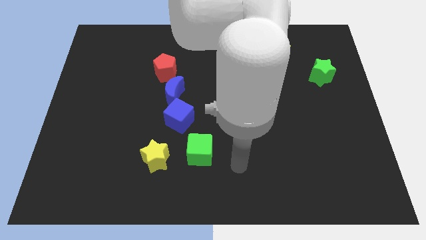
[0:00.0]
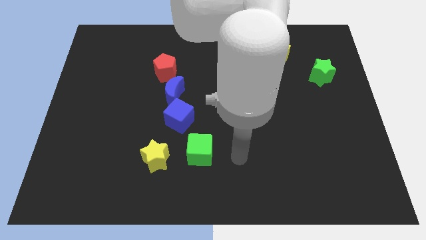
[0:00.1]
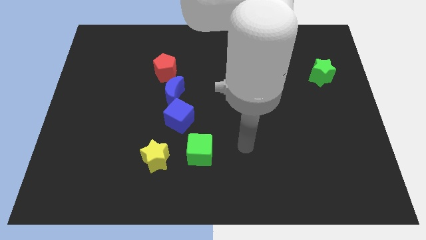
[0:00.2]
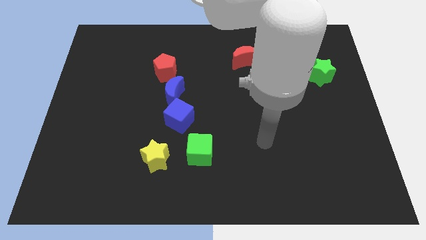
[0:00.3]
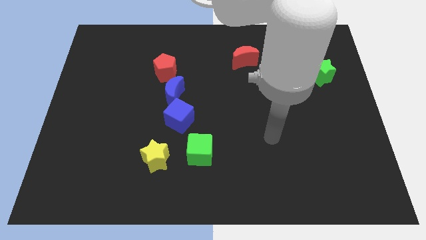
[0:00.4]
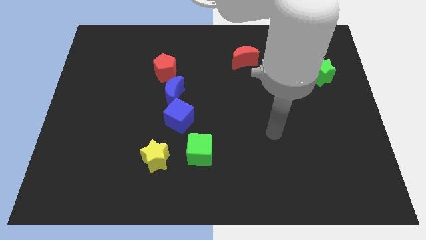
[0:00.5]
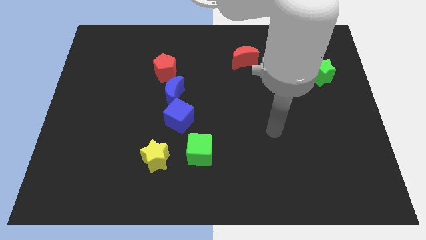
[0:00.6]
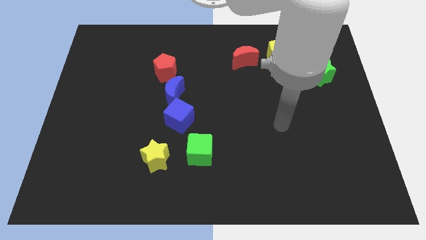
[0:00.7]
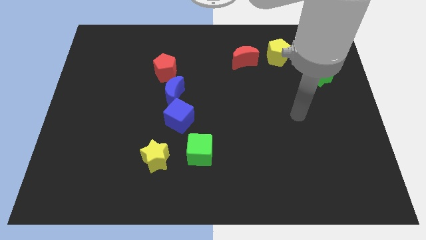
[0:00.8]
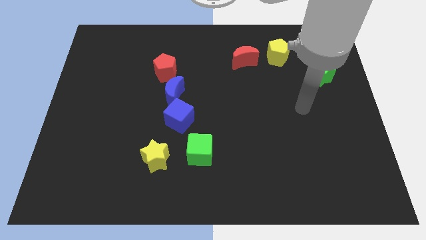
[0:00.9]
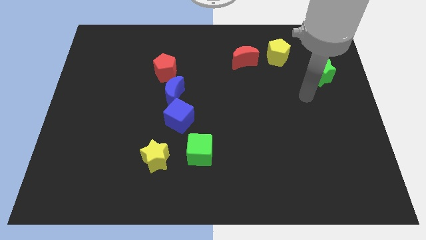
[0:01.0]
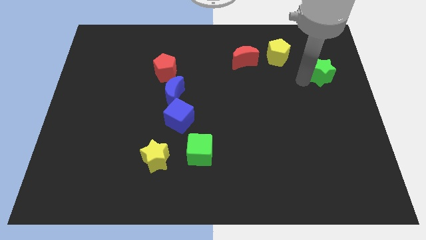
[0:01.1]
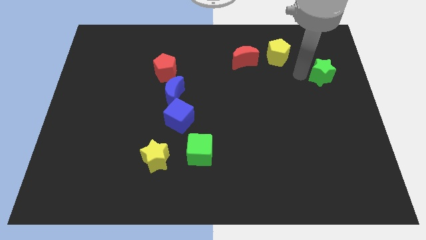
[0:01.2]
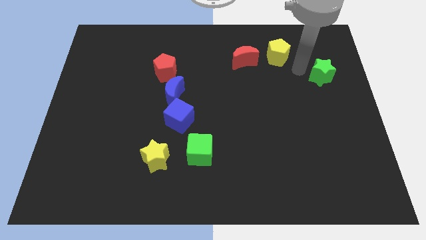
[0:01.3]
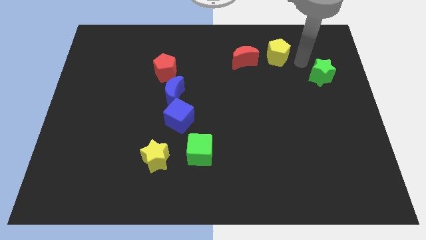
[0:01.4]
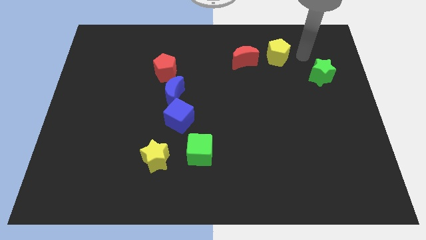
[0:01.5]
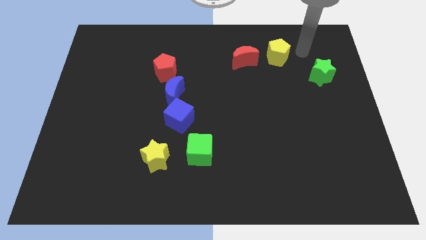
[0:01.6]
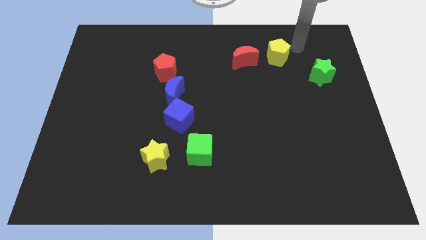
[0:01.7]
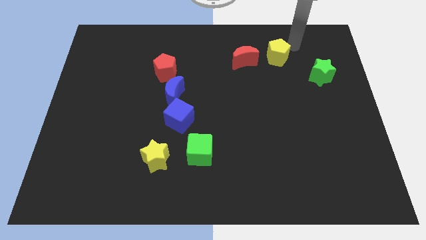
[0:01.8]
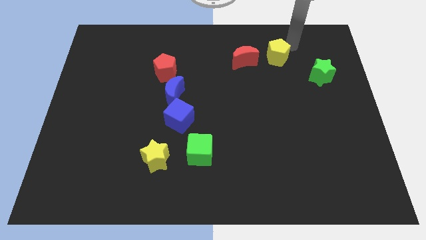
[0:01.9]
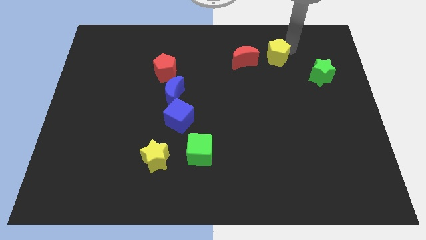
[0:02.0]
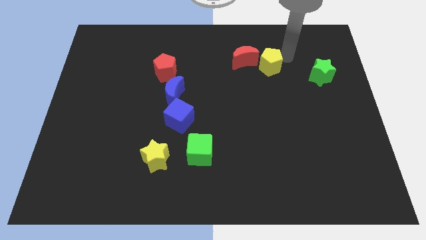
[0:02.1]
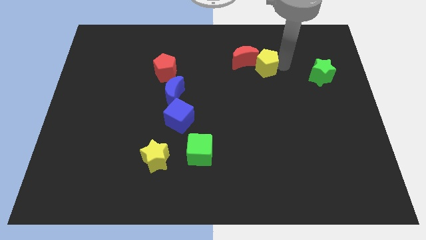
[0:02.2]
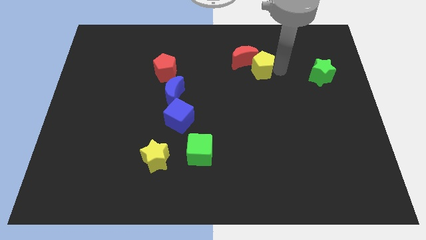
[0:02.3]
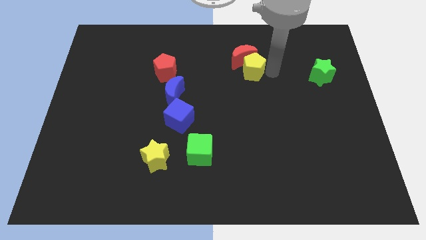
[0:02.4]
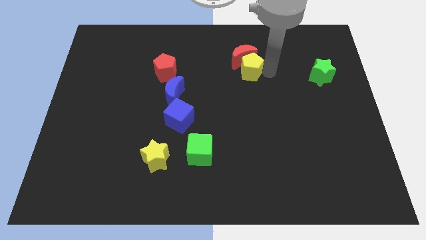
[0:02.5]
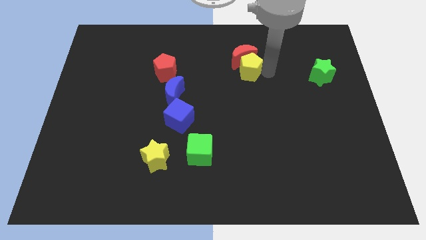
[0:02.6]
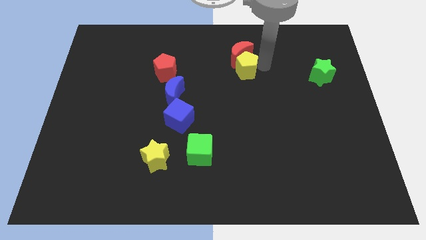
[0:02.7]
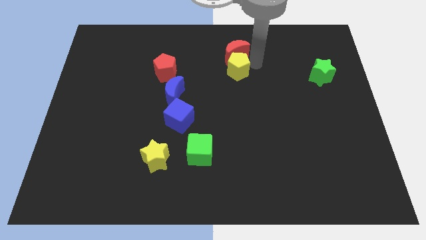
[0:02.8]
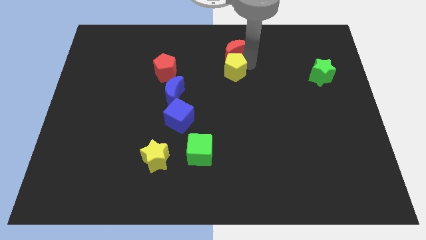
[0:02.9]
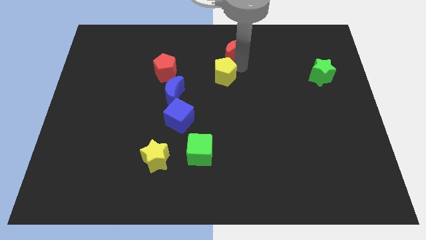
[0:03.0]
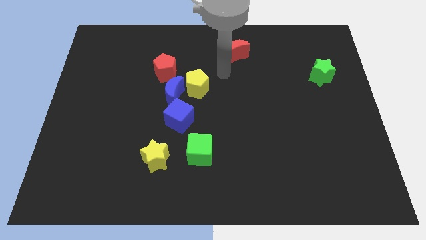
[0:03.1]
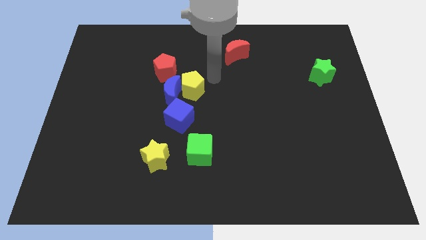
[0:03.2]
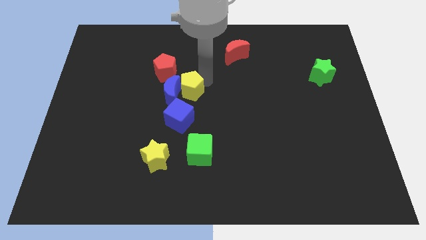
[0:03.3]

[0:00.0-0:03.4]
slide the yellow pentagon close to the blue moon

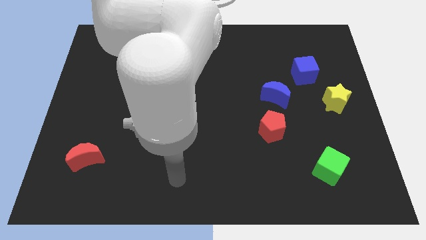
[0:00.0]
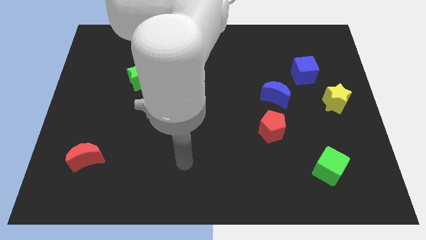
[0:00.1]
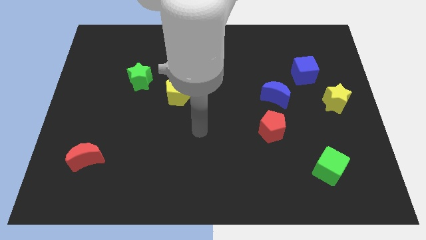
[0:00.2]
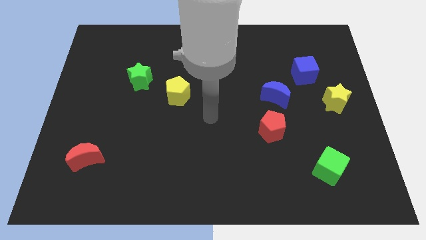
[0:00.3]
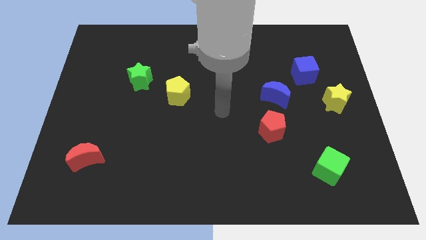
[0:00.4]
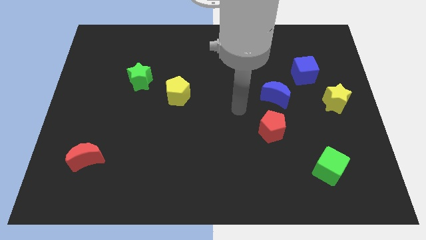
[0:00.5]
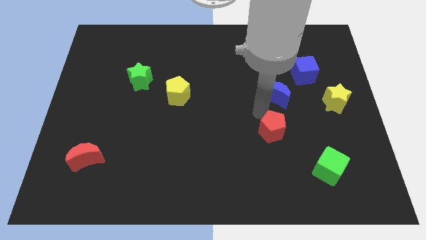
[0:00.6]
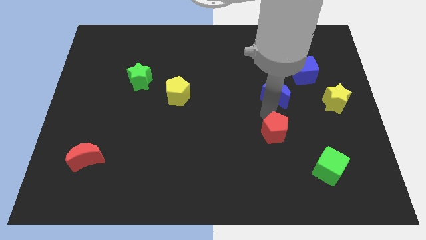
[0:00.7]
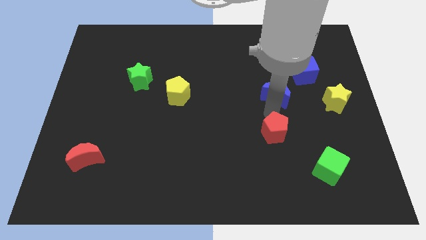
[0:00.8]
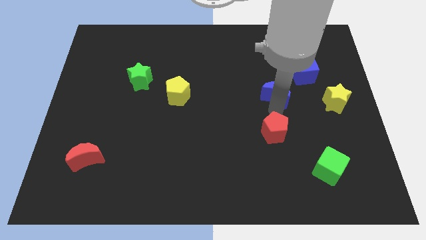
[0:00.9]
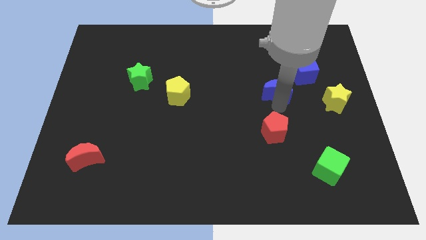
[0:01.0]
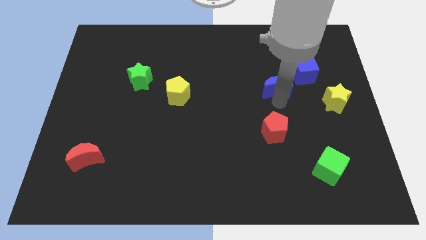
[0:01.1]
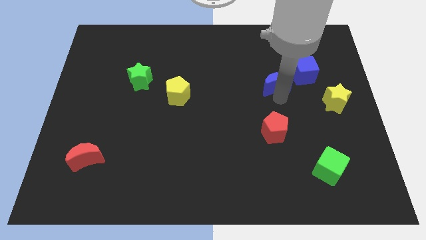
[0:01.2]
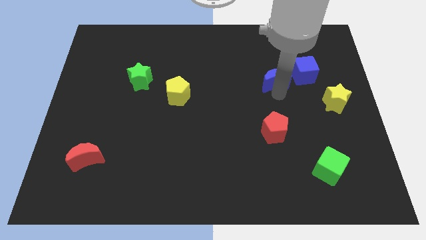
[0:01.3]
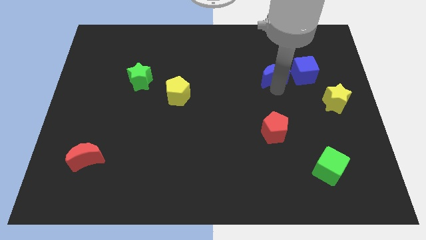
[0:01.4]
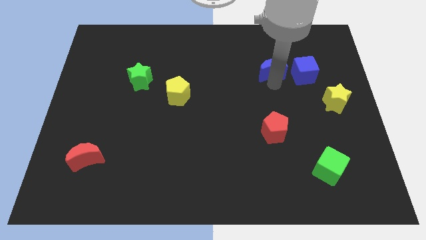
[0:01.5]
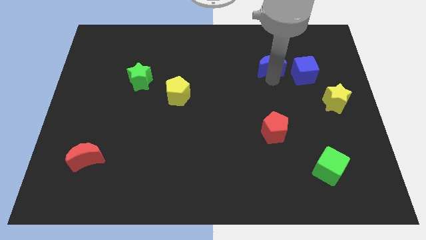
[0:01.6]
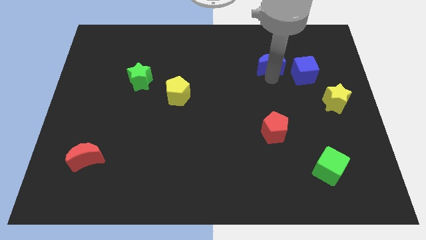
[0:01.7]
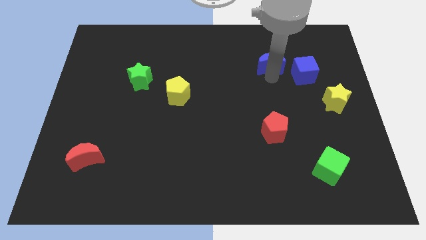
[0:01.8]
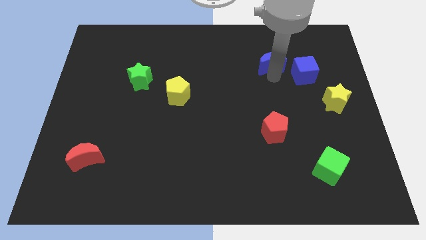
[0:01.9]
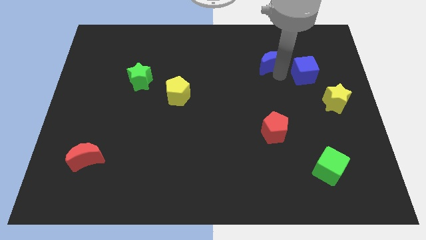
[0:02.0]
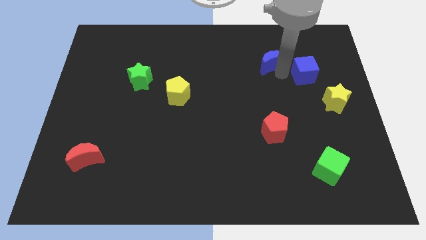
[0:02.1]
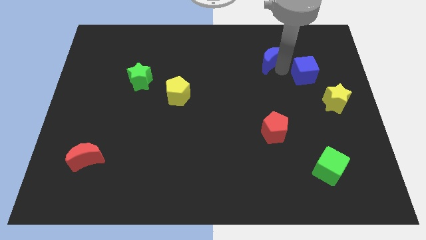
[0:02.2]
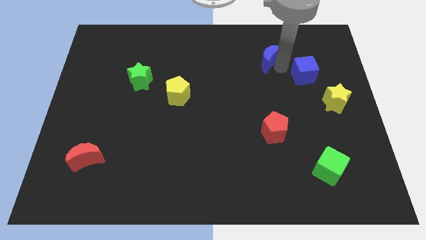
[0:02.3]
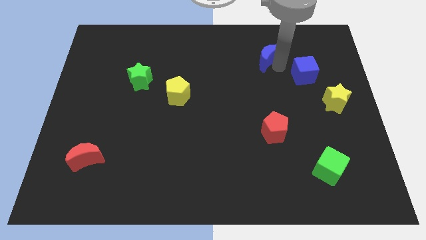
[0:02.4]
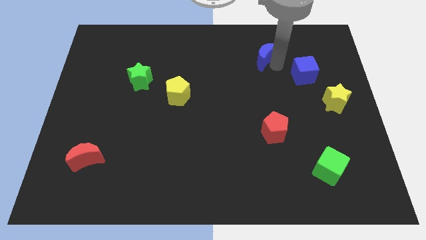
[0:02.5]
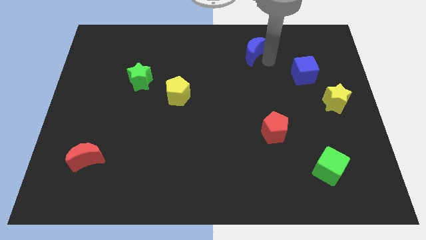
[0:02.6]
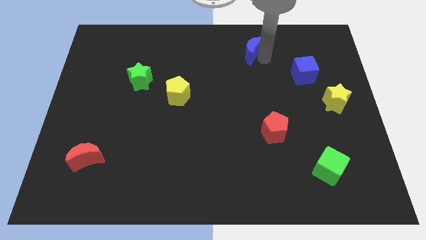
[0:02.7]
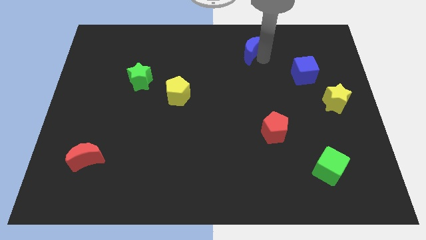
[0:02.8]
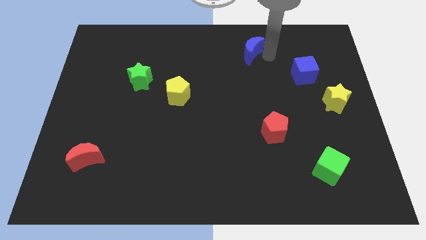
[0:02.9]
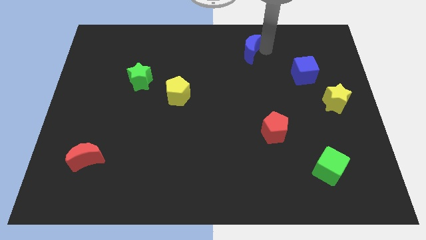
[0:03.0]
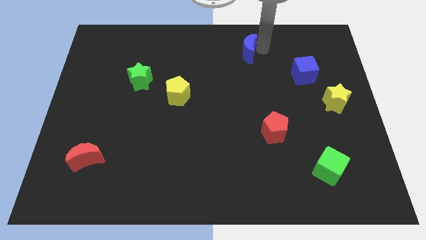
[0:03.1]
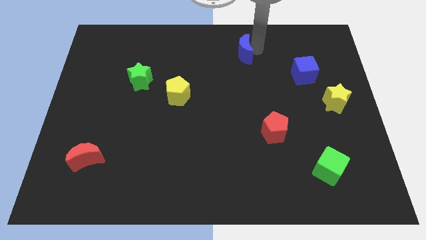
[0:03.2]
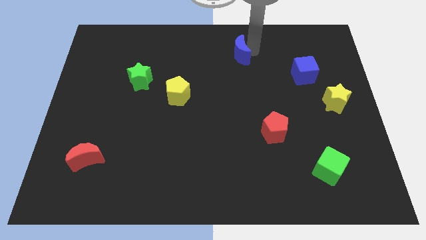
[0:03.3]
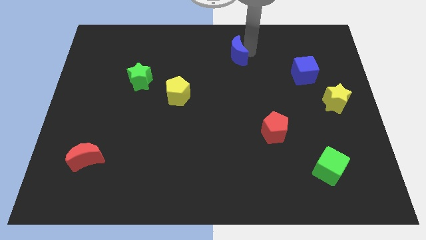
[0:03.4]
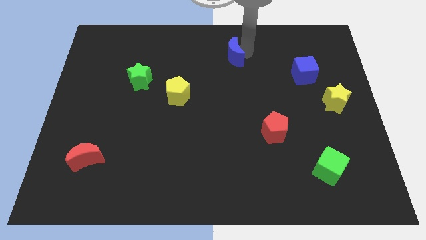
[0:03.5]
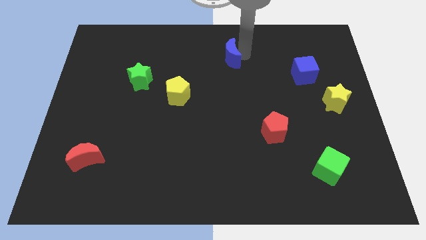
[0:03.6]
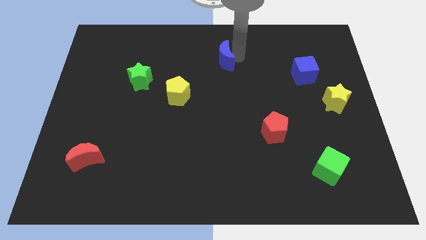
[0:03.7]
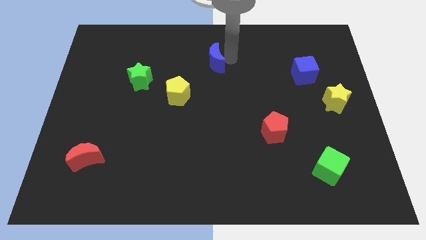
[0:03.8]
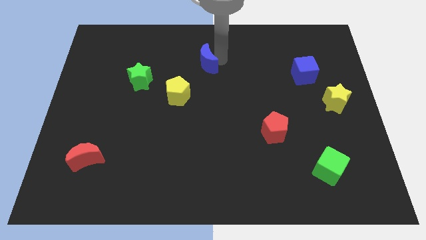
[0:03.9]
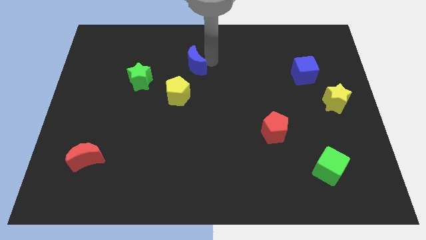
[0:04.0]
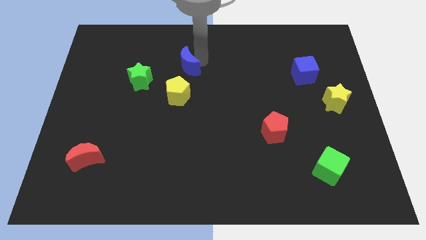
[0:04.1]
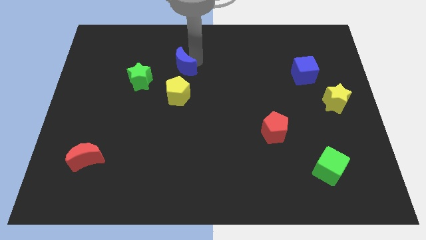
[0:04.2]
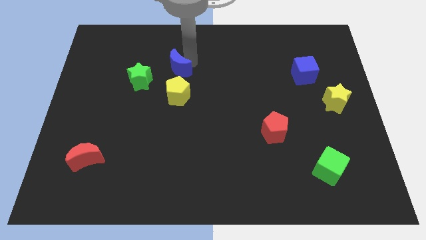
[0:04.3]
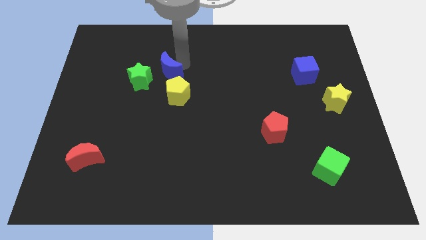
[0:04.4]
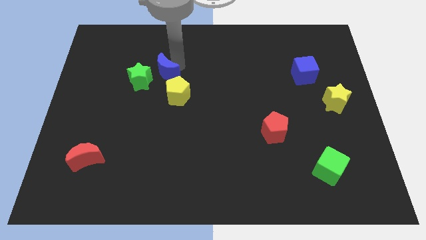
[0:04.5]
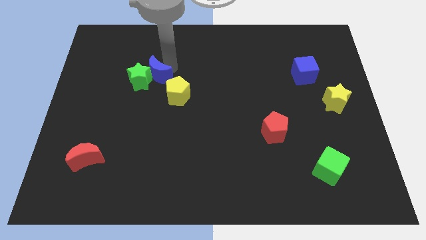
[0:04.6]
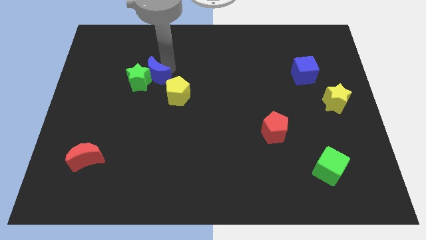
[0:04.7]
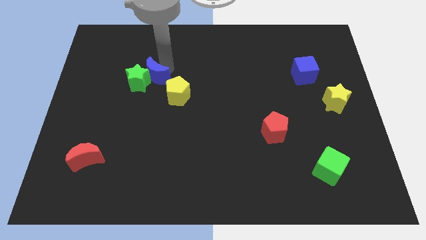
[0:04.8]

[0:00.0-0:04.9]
slide the blue moon next to the green star
